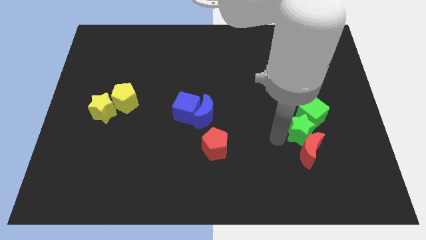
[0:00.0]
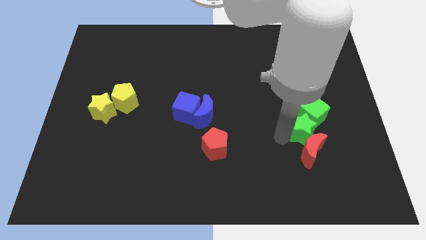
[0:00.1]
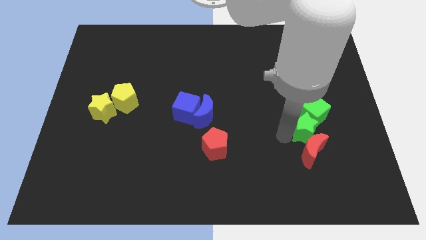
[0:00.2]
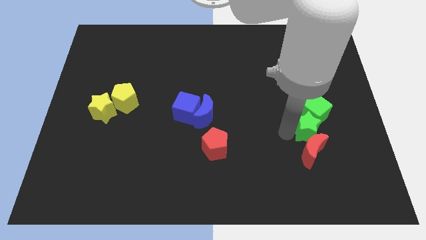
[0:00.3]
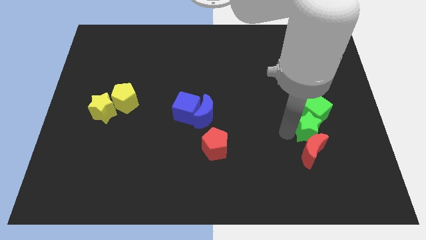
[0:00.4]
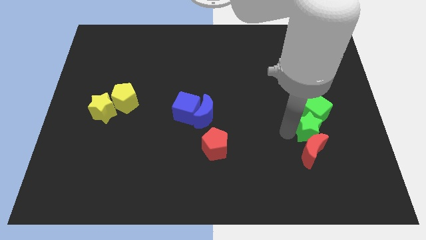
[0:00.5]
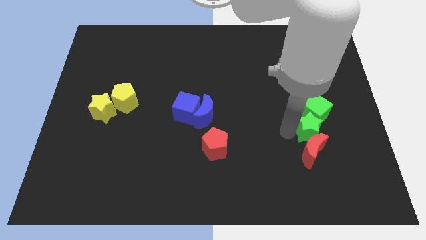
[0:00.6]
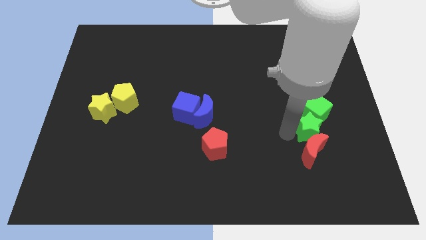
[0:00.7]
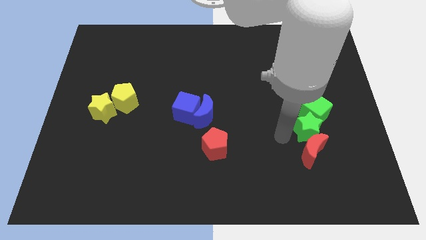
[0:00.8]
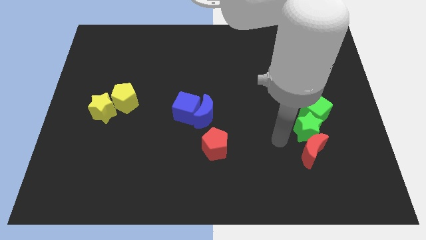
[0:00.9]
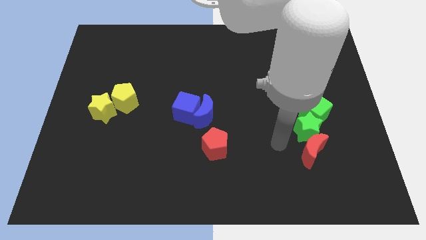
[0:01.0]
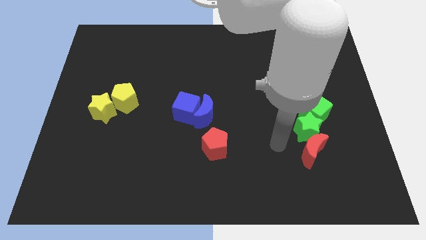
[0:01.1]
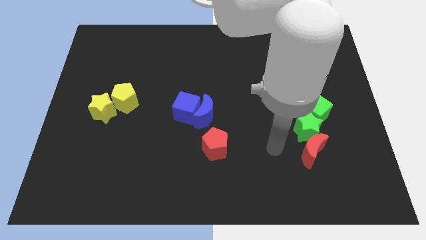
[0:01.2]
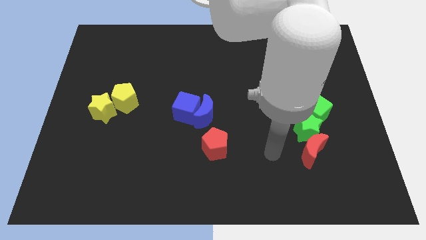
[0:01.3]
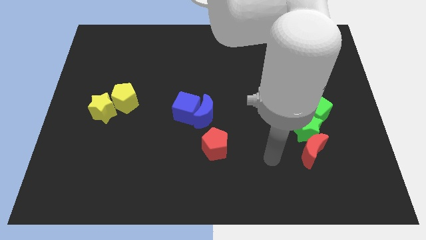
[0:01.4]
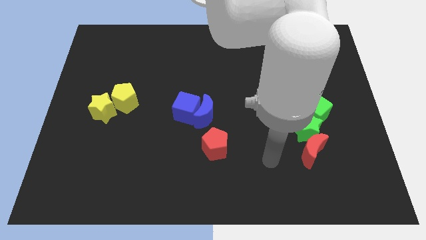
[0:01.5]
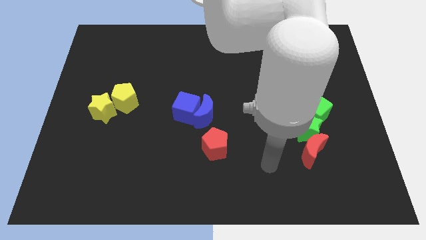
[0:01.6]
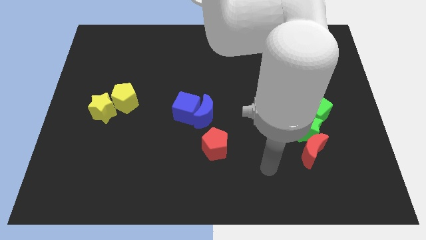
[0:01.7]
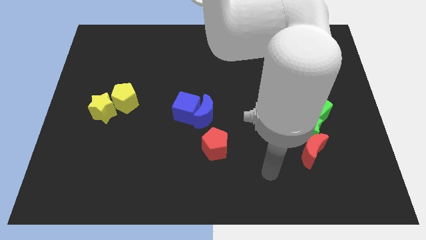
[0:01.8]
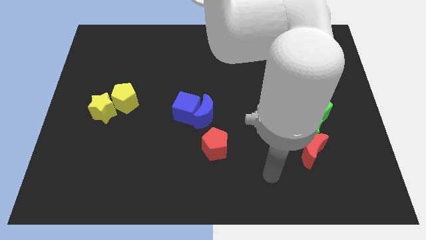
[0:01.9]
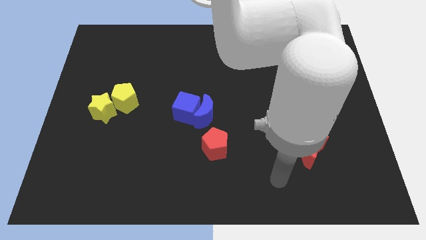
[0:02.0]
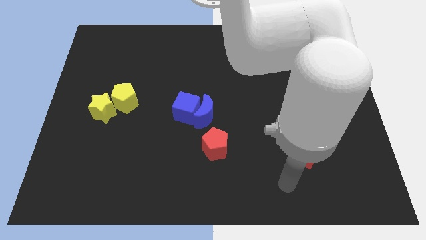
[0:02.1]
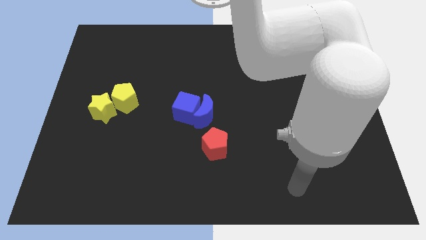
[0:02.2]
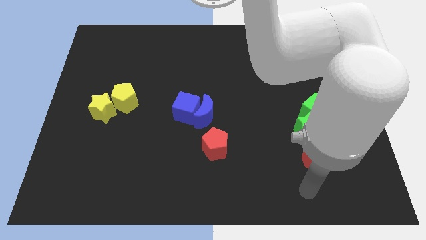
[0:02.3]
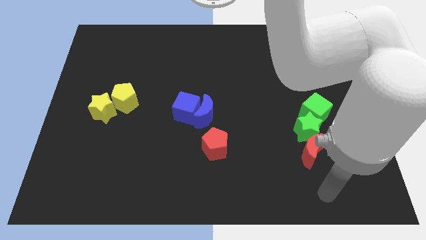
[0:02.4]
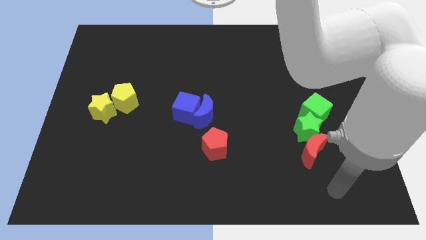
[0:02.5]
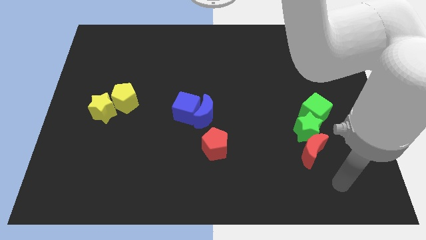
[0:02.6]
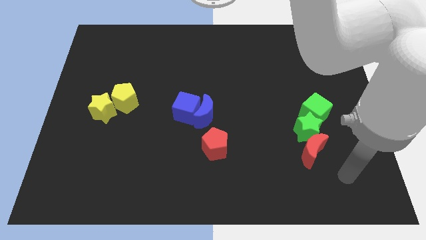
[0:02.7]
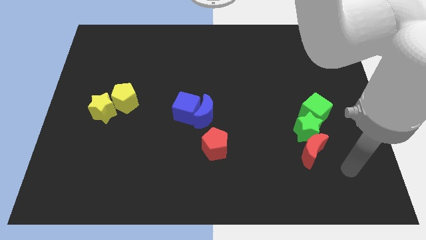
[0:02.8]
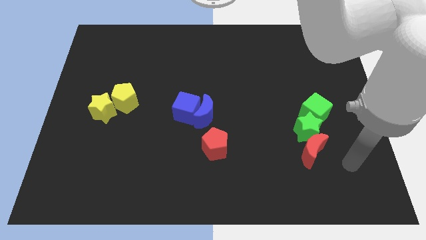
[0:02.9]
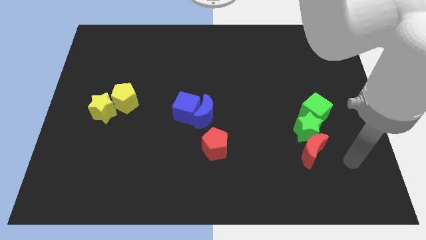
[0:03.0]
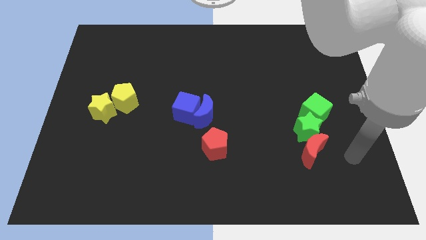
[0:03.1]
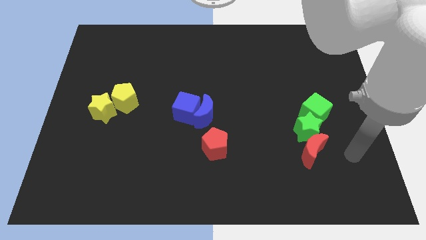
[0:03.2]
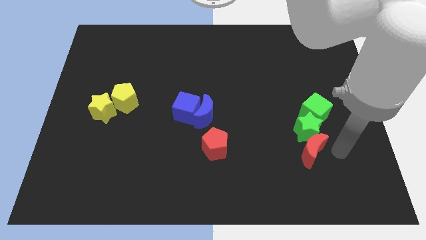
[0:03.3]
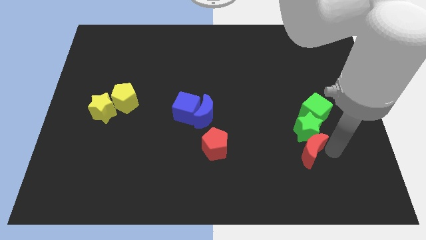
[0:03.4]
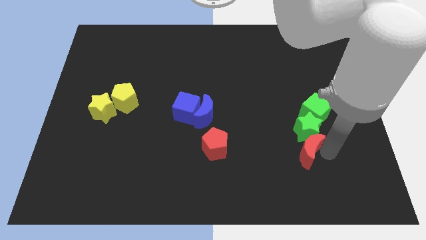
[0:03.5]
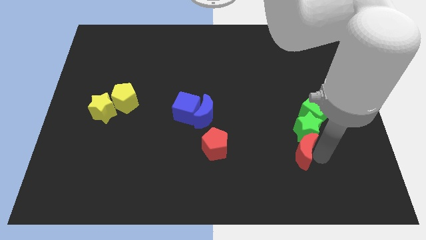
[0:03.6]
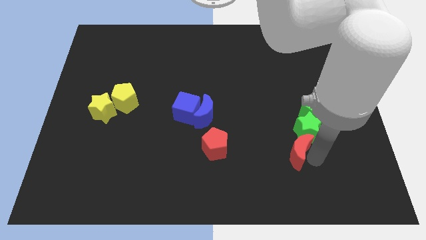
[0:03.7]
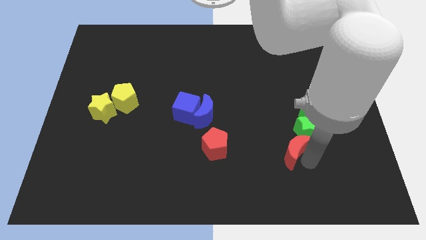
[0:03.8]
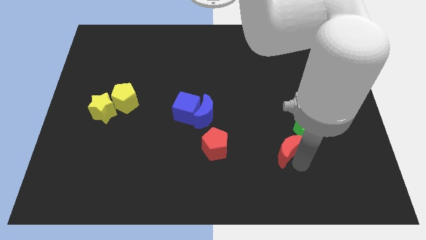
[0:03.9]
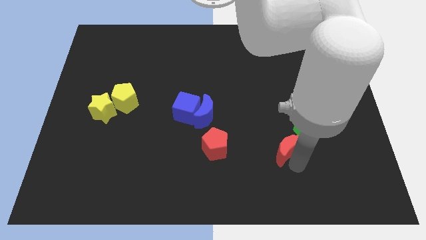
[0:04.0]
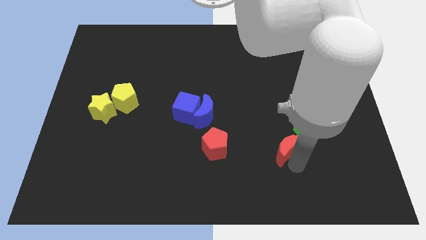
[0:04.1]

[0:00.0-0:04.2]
move the red moon belopw tghe green star

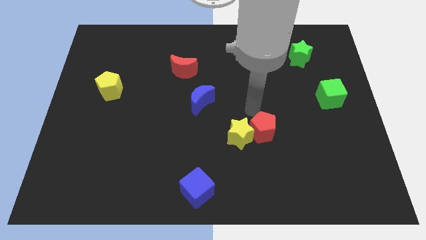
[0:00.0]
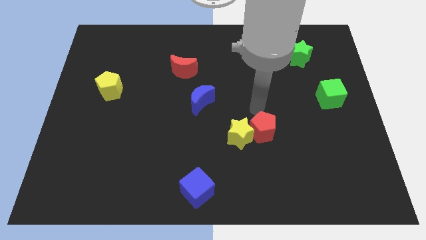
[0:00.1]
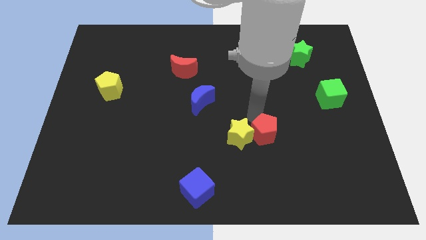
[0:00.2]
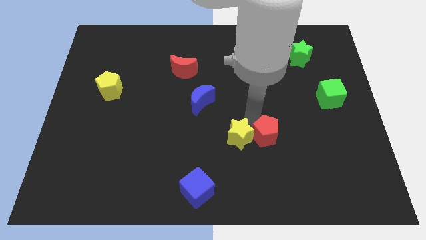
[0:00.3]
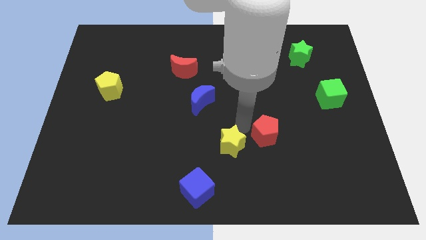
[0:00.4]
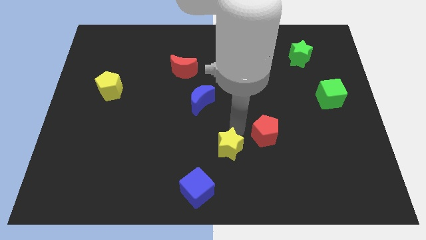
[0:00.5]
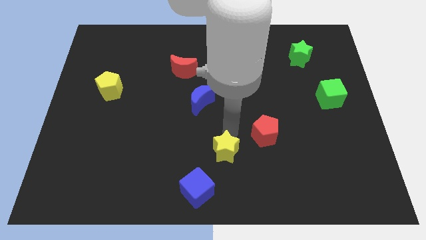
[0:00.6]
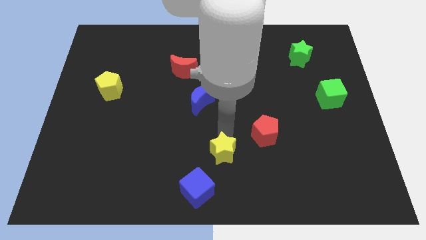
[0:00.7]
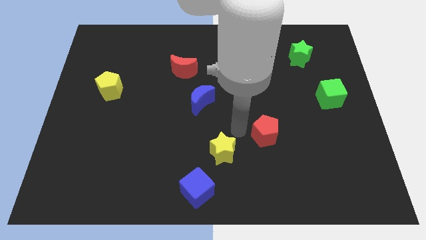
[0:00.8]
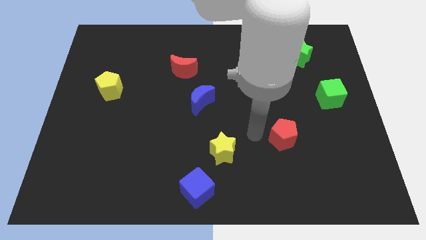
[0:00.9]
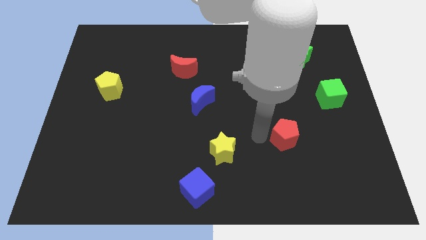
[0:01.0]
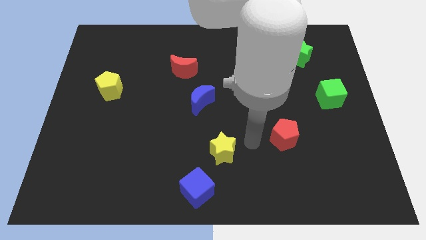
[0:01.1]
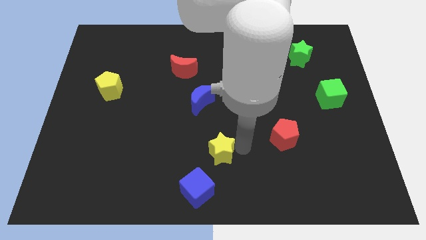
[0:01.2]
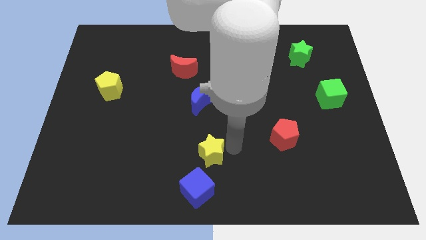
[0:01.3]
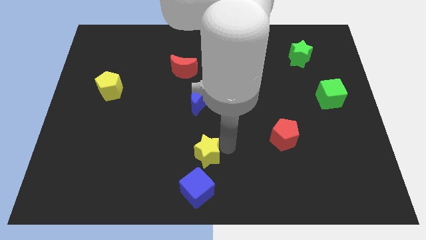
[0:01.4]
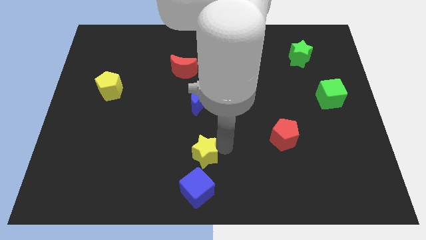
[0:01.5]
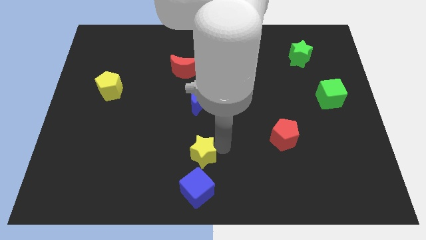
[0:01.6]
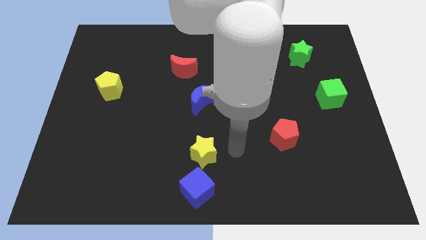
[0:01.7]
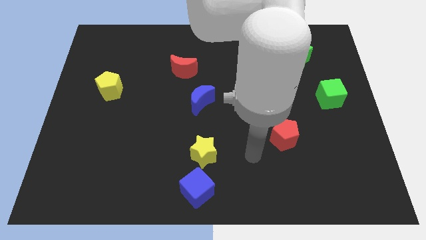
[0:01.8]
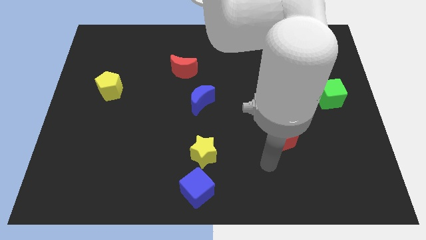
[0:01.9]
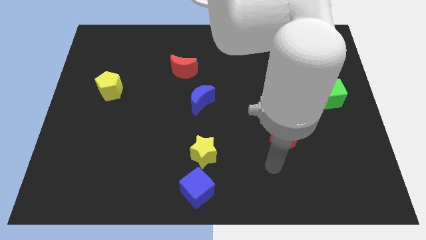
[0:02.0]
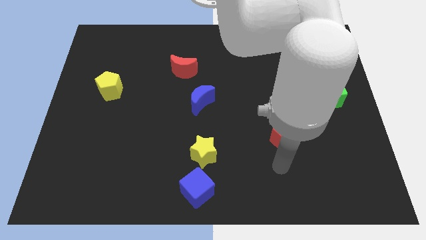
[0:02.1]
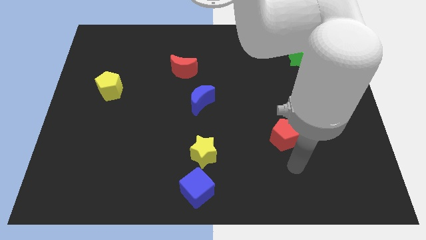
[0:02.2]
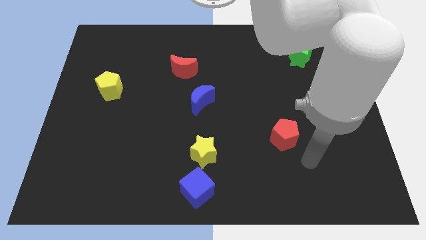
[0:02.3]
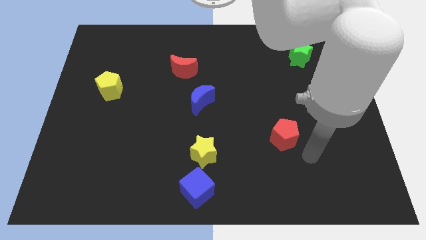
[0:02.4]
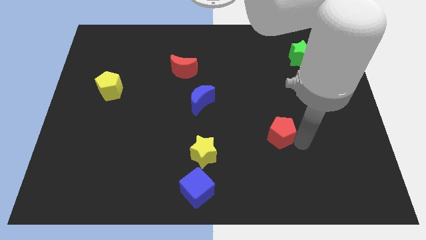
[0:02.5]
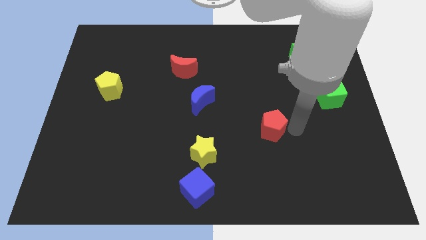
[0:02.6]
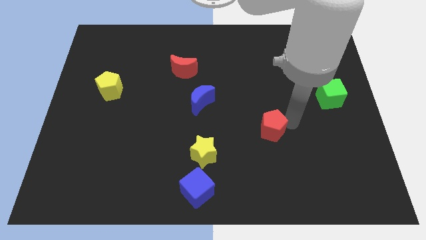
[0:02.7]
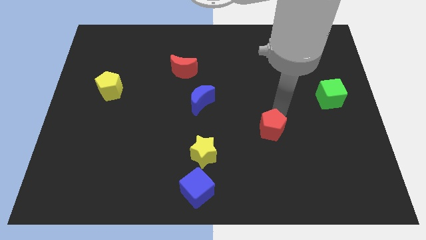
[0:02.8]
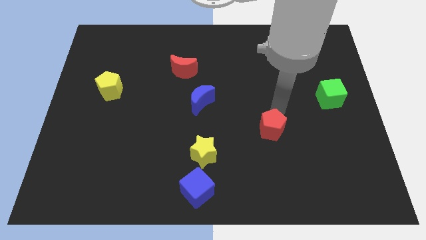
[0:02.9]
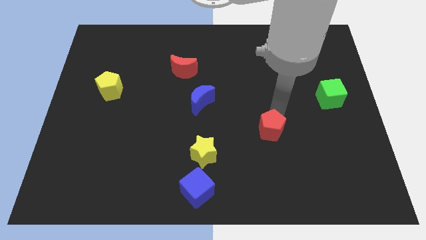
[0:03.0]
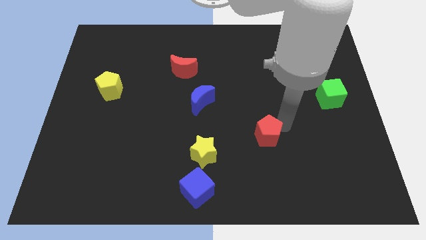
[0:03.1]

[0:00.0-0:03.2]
push the yellow star and the red pentagon diagonal to each other

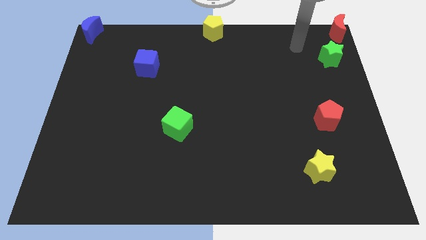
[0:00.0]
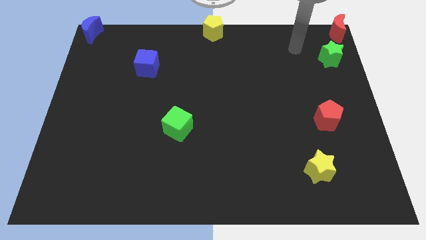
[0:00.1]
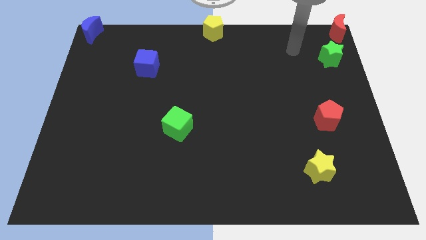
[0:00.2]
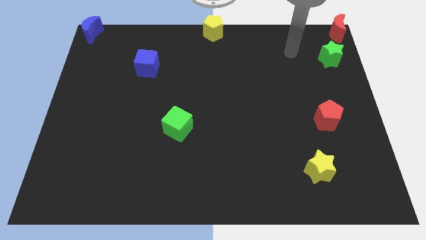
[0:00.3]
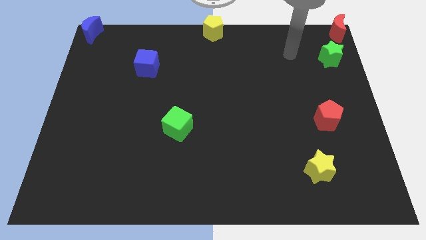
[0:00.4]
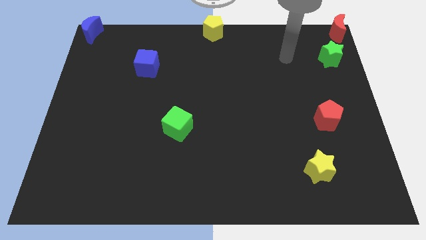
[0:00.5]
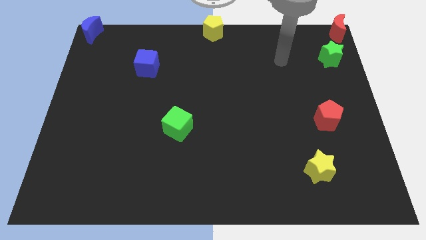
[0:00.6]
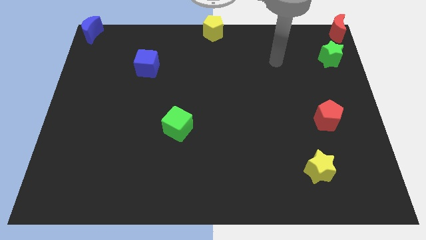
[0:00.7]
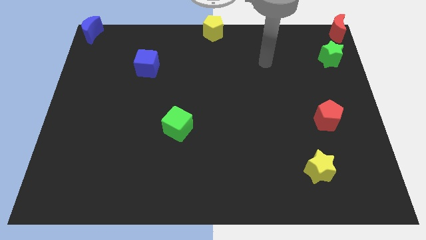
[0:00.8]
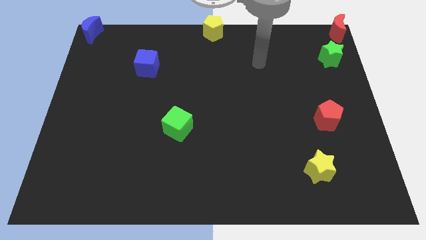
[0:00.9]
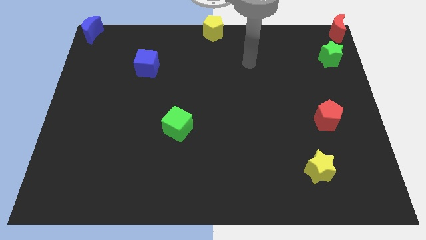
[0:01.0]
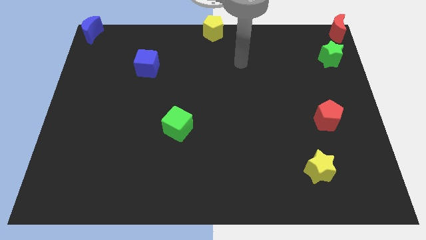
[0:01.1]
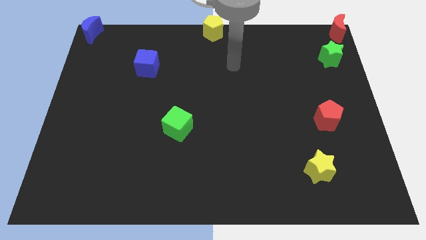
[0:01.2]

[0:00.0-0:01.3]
go to the left side of the board

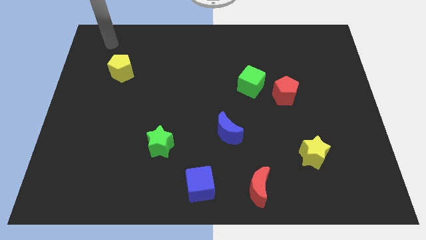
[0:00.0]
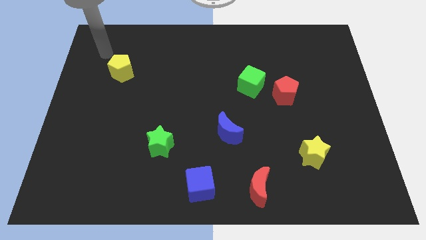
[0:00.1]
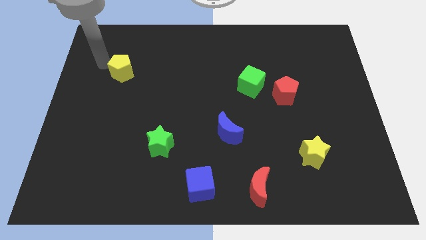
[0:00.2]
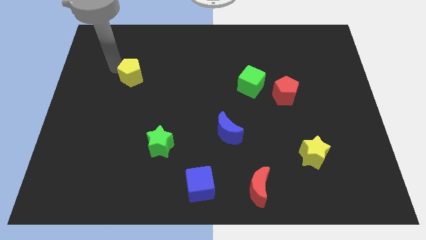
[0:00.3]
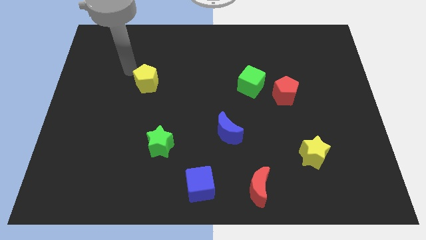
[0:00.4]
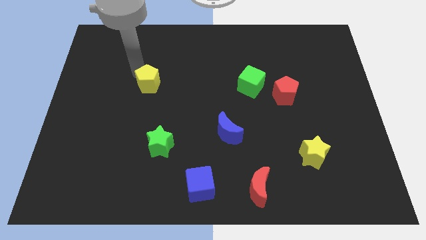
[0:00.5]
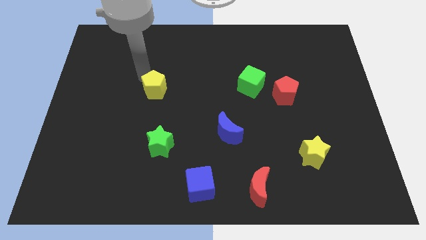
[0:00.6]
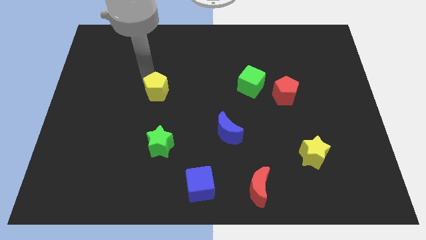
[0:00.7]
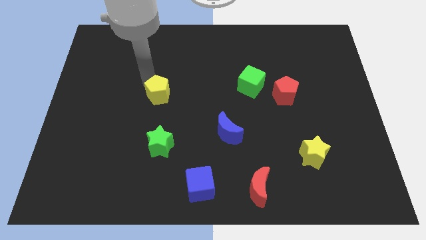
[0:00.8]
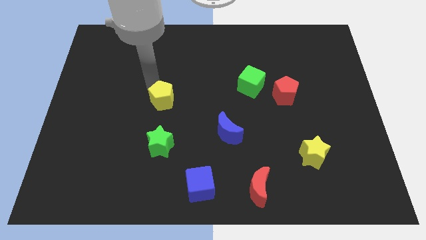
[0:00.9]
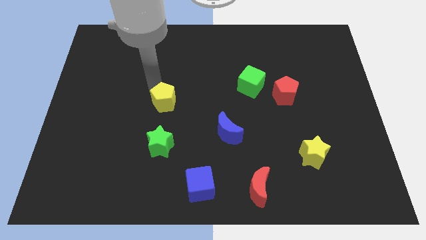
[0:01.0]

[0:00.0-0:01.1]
push the yellow pentagon towards the green star
